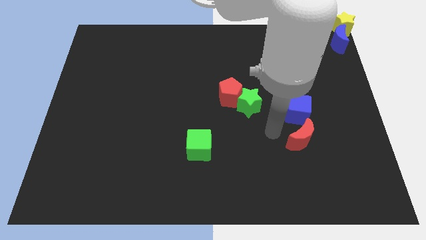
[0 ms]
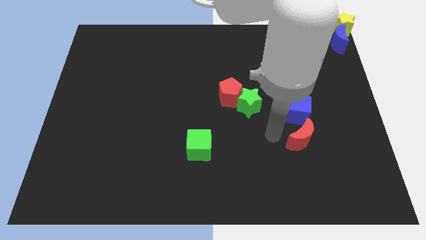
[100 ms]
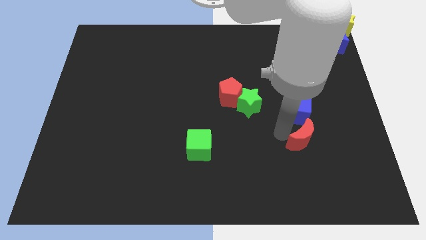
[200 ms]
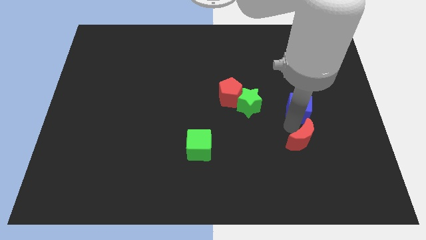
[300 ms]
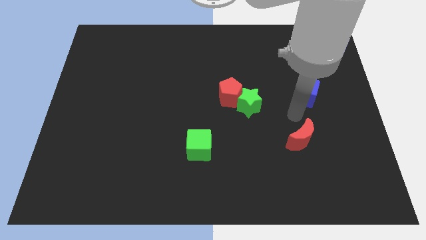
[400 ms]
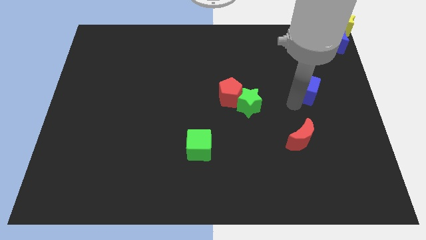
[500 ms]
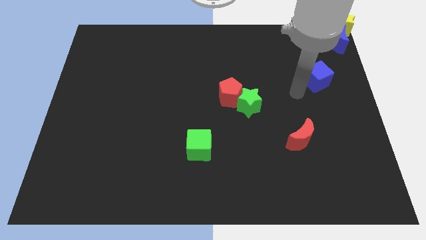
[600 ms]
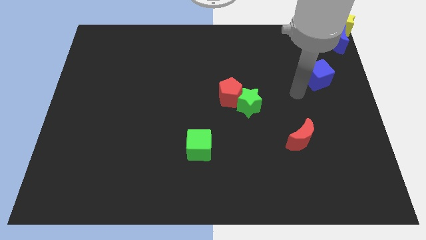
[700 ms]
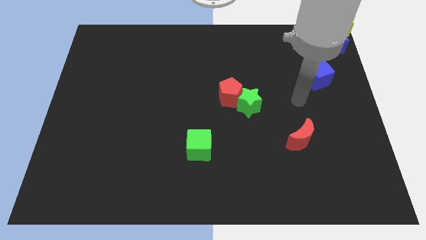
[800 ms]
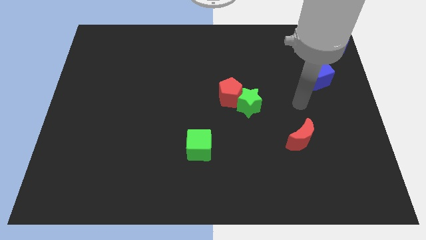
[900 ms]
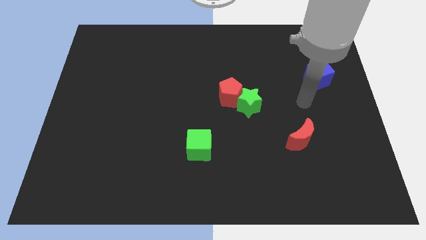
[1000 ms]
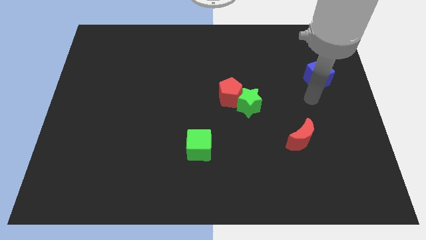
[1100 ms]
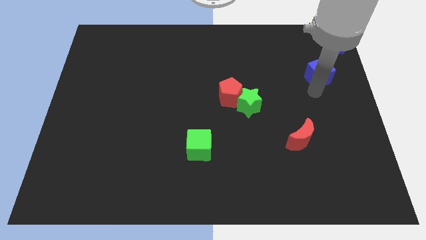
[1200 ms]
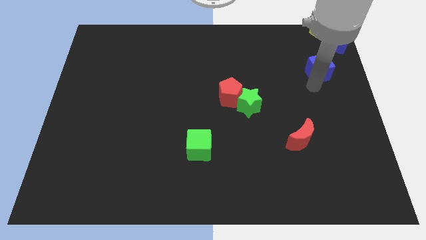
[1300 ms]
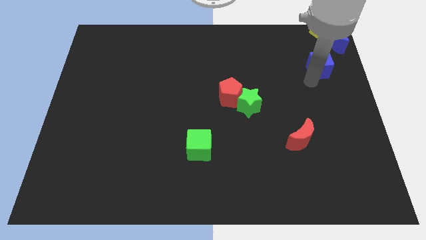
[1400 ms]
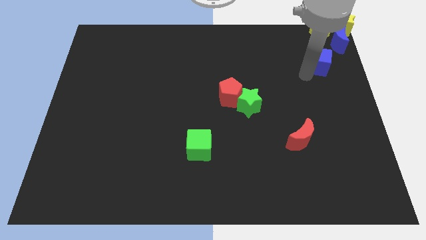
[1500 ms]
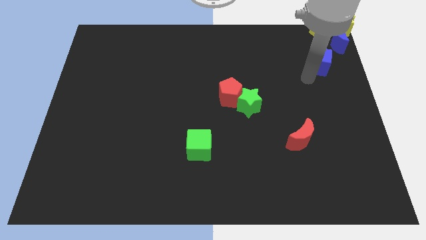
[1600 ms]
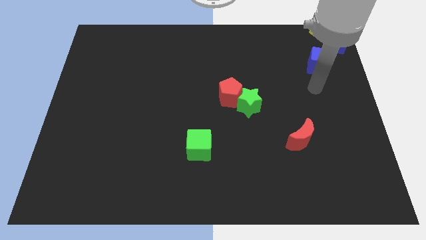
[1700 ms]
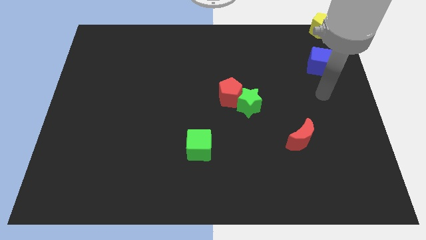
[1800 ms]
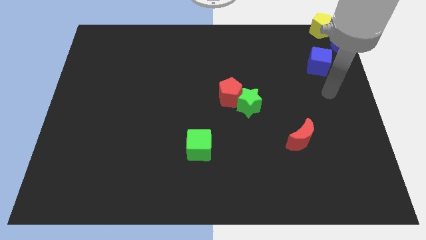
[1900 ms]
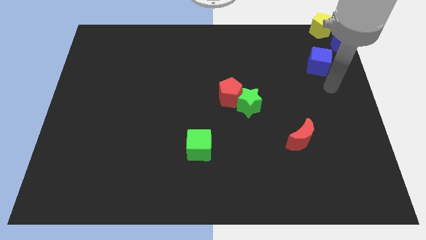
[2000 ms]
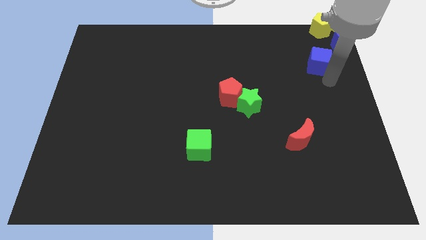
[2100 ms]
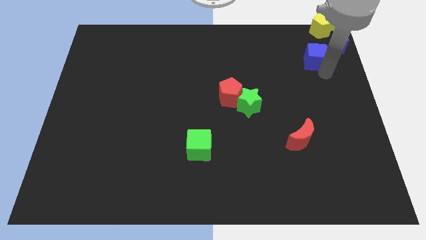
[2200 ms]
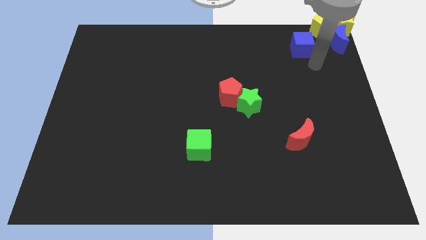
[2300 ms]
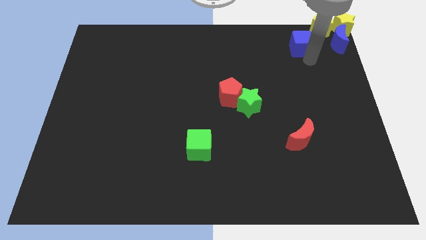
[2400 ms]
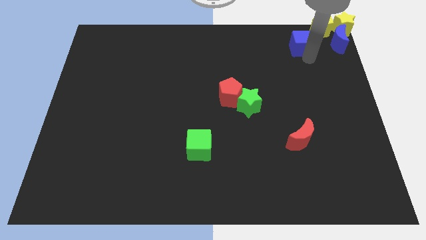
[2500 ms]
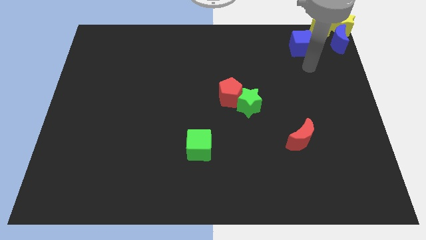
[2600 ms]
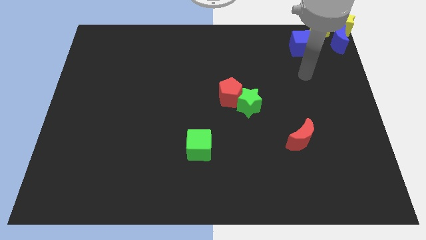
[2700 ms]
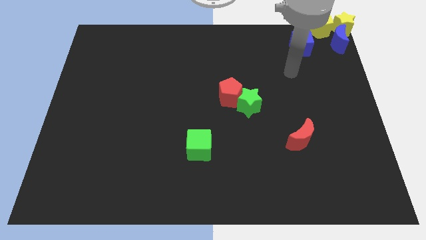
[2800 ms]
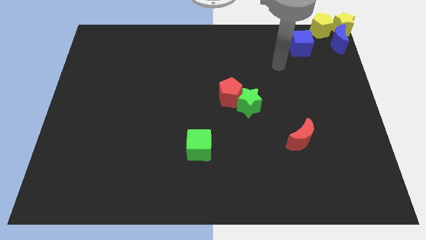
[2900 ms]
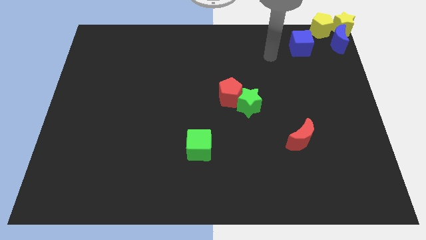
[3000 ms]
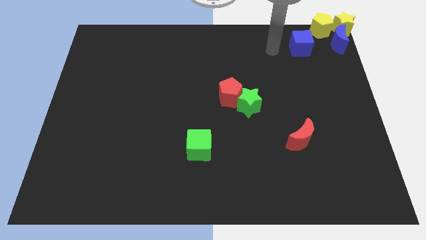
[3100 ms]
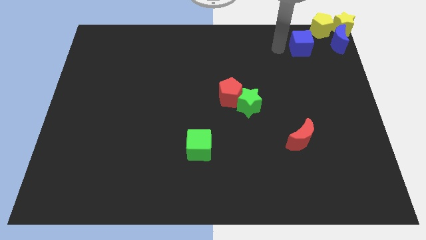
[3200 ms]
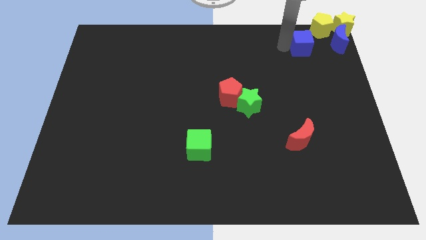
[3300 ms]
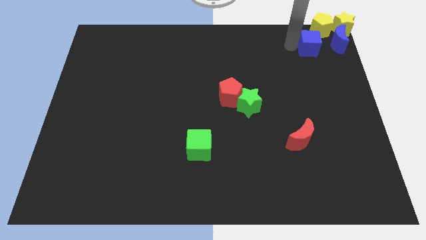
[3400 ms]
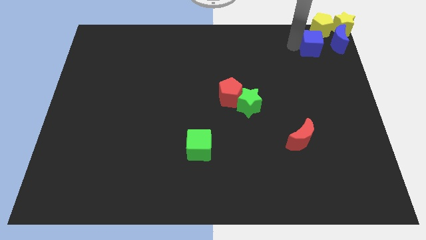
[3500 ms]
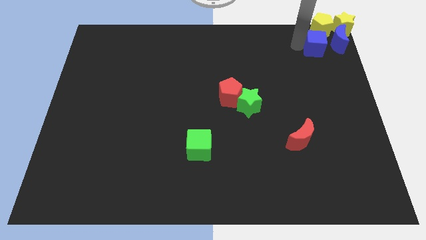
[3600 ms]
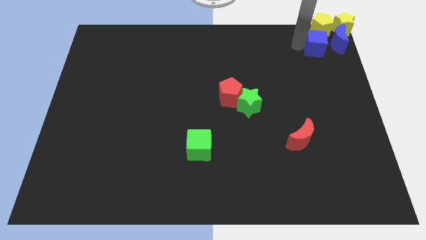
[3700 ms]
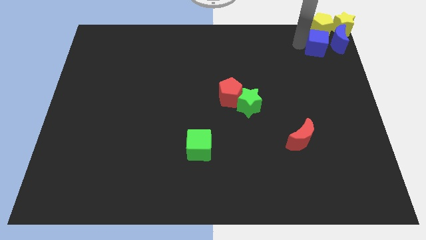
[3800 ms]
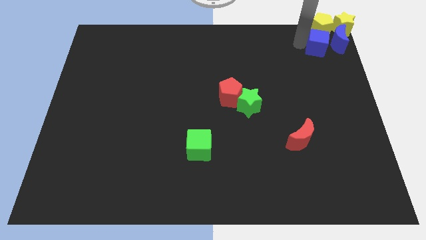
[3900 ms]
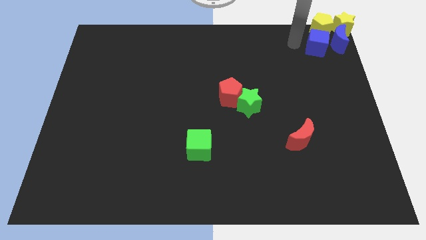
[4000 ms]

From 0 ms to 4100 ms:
move the blue cube to the top right of the board

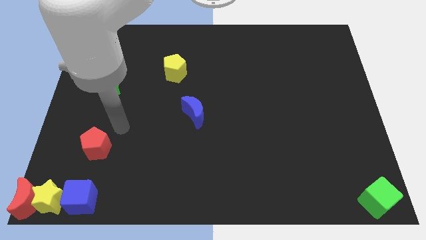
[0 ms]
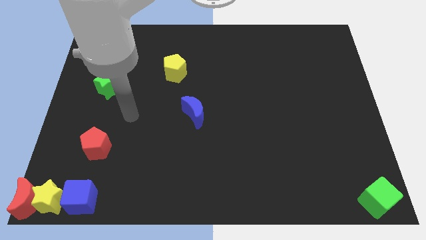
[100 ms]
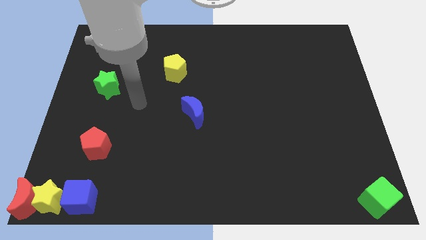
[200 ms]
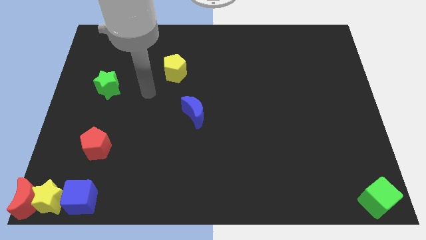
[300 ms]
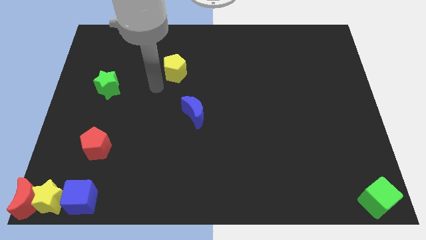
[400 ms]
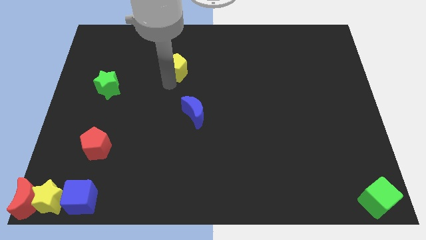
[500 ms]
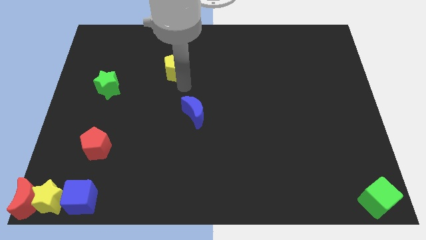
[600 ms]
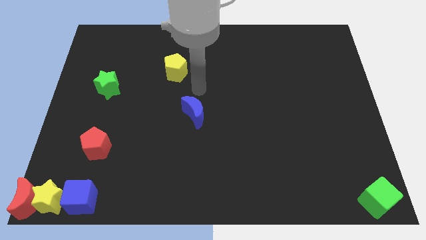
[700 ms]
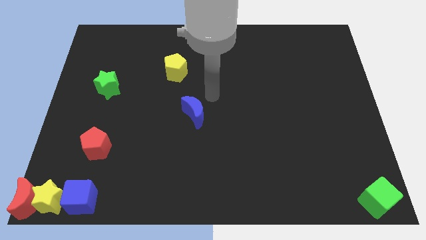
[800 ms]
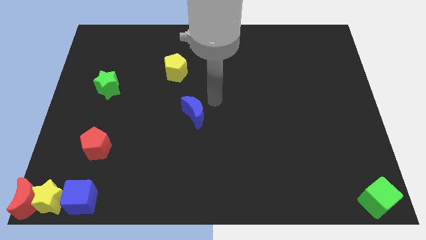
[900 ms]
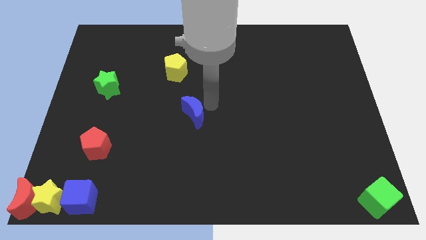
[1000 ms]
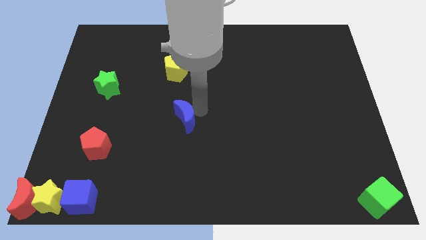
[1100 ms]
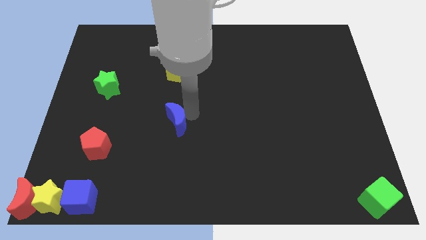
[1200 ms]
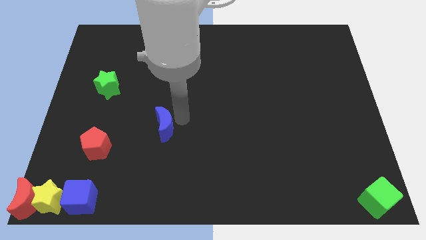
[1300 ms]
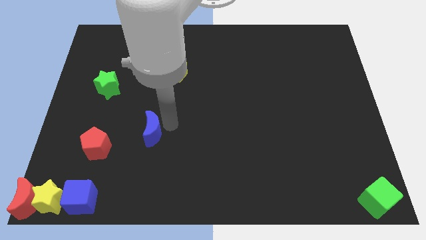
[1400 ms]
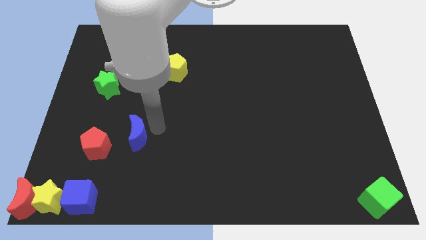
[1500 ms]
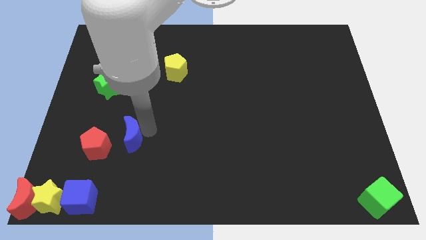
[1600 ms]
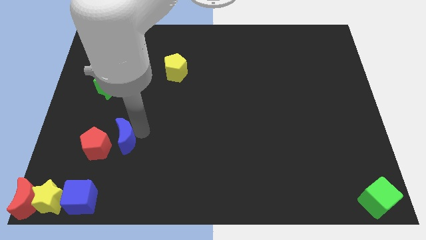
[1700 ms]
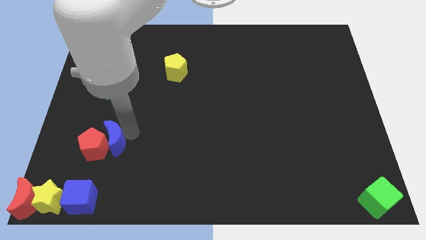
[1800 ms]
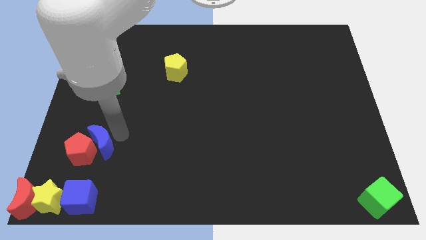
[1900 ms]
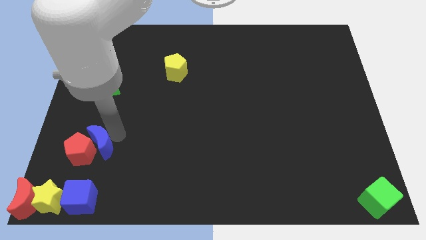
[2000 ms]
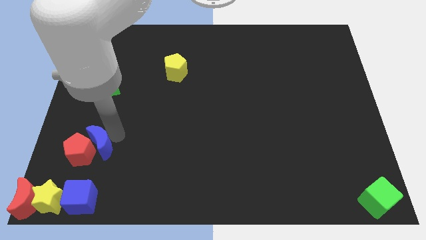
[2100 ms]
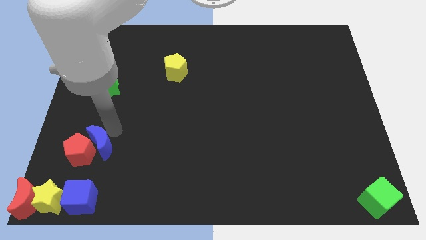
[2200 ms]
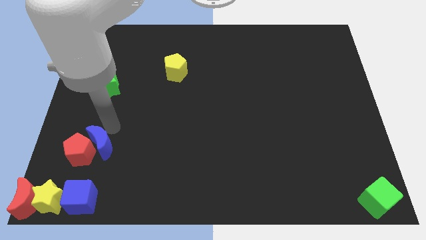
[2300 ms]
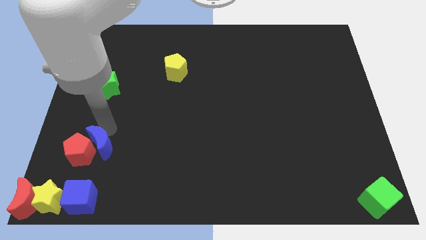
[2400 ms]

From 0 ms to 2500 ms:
push the blue moon into the red pentagon

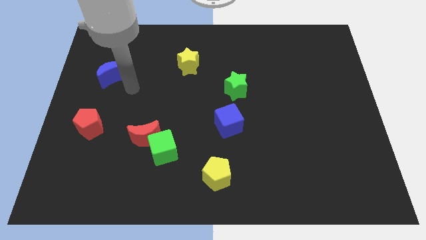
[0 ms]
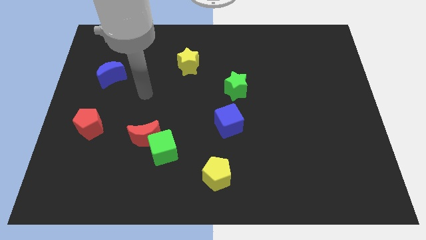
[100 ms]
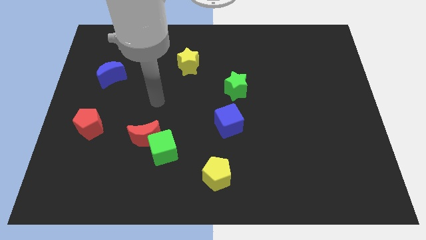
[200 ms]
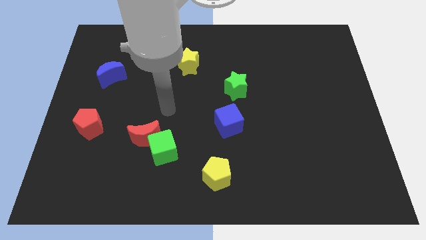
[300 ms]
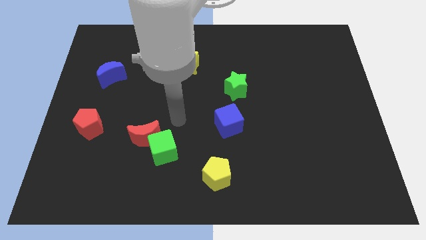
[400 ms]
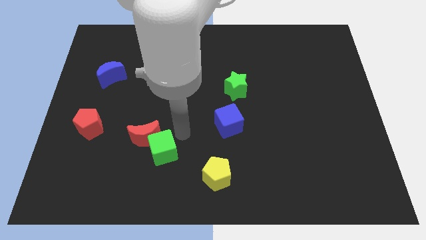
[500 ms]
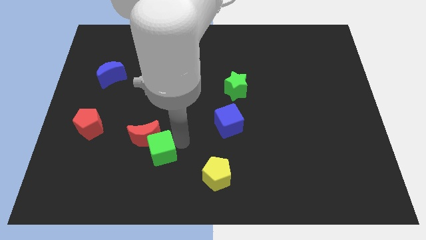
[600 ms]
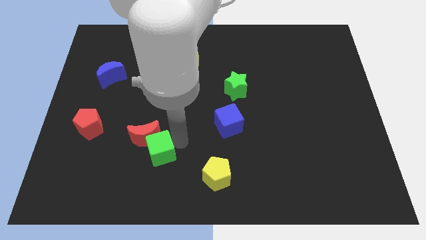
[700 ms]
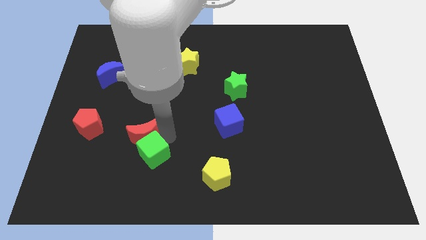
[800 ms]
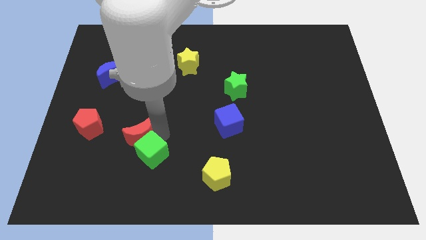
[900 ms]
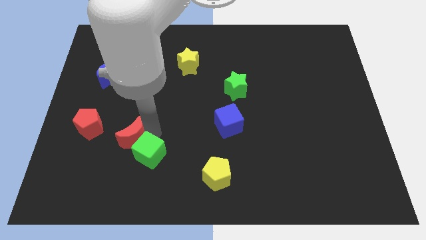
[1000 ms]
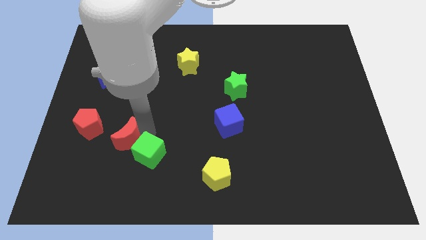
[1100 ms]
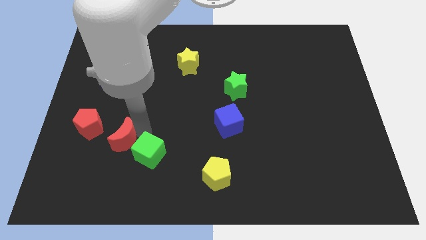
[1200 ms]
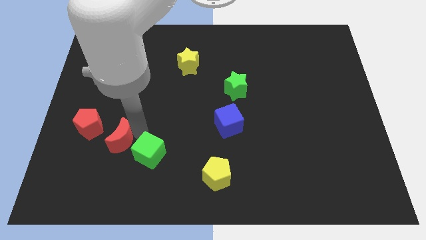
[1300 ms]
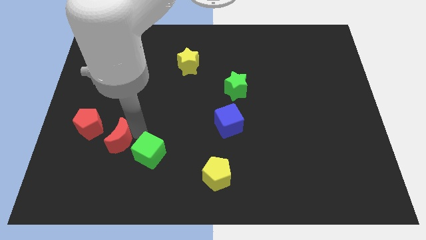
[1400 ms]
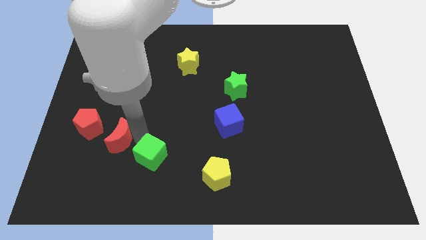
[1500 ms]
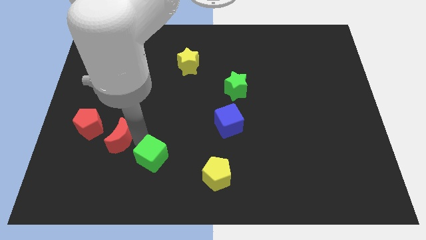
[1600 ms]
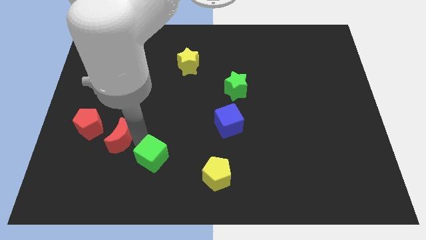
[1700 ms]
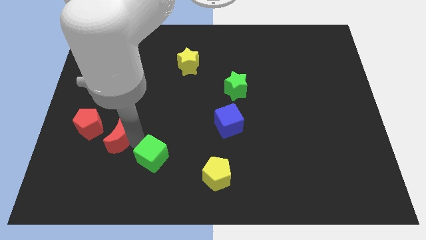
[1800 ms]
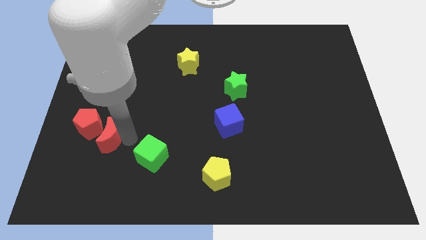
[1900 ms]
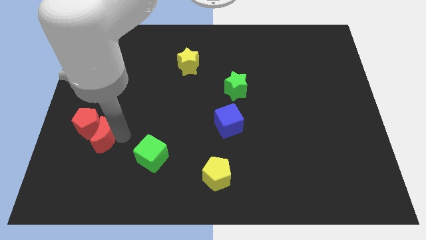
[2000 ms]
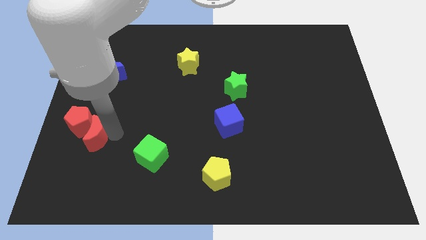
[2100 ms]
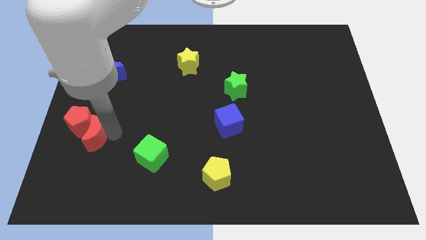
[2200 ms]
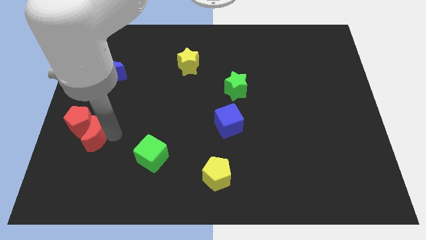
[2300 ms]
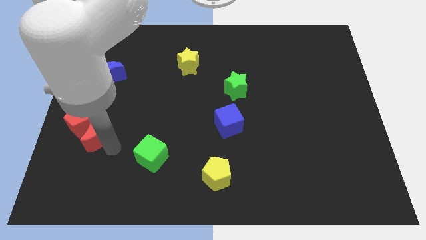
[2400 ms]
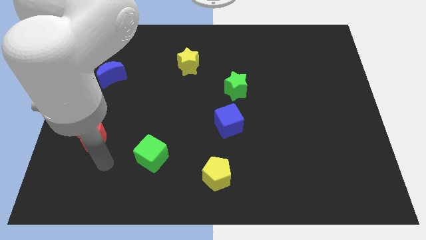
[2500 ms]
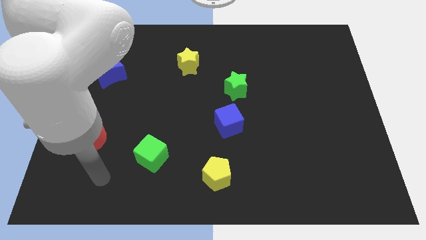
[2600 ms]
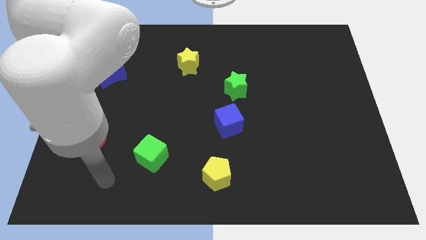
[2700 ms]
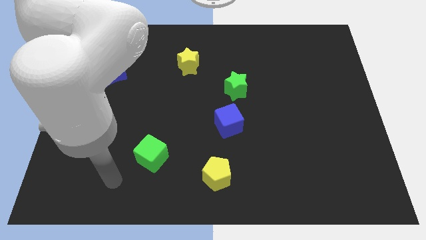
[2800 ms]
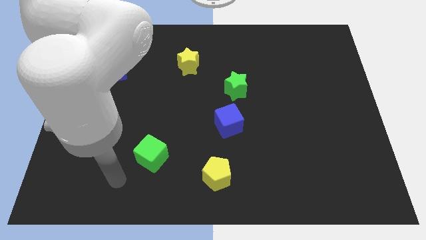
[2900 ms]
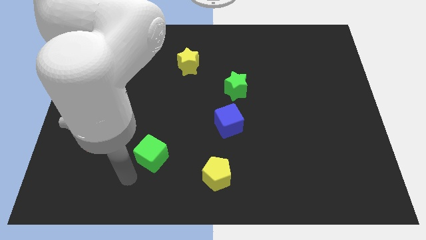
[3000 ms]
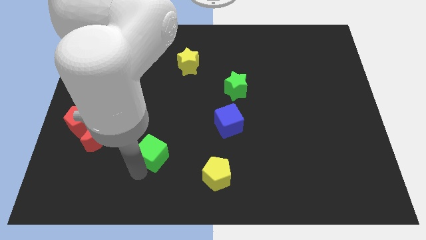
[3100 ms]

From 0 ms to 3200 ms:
push the red crescent into the red pentagon
